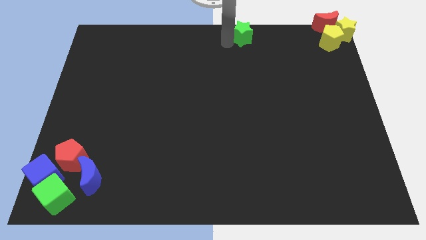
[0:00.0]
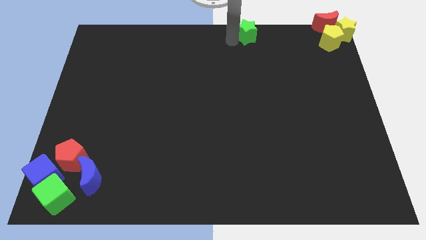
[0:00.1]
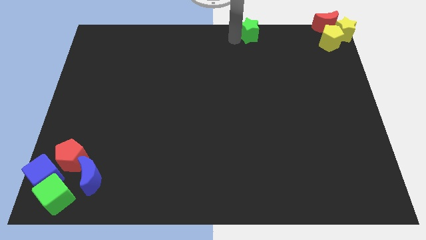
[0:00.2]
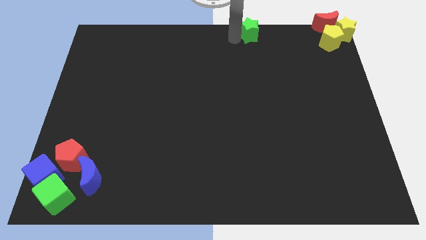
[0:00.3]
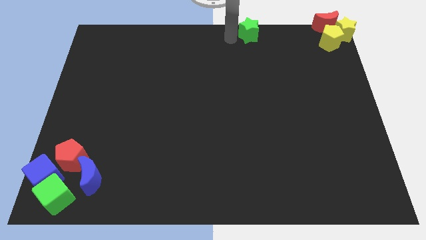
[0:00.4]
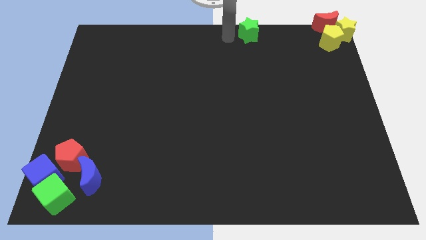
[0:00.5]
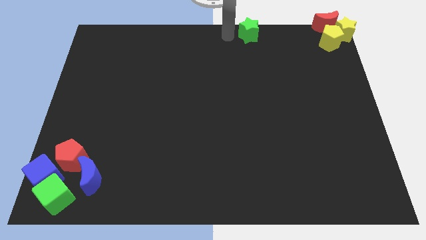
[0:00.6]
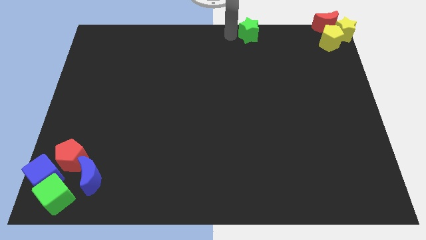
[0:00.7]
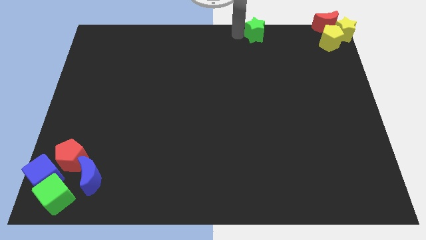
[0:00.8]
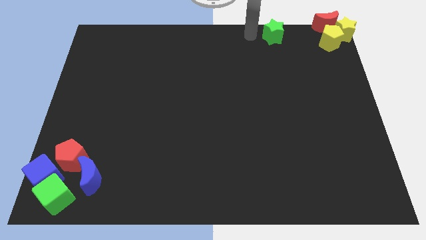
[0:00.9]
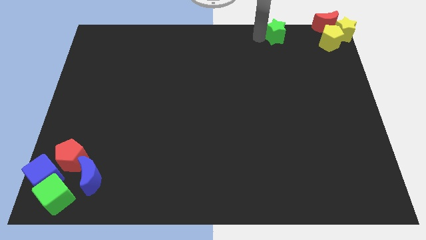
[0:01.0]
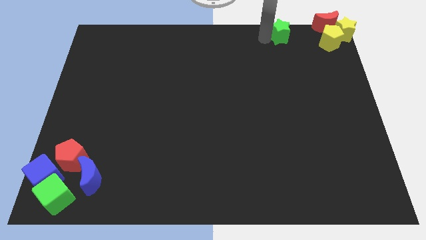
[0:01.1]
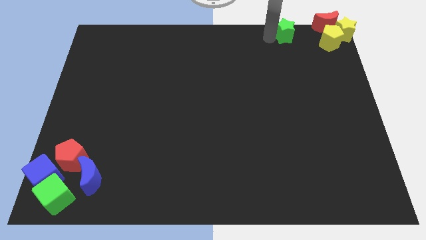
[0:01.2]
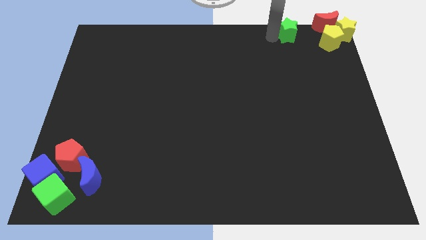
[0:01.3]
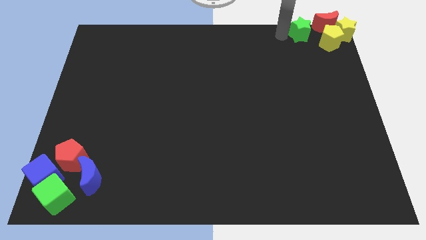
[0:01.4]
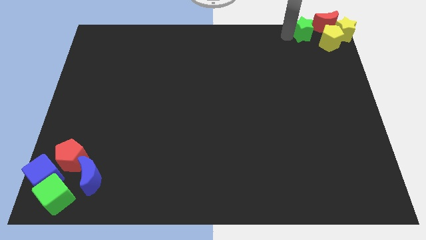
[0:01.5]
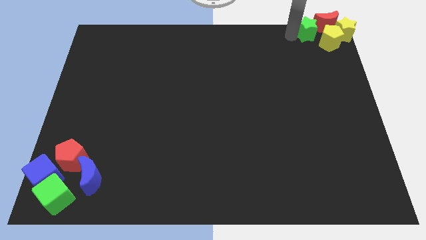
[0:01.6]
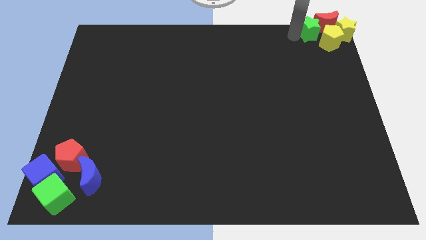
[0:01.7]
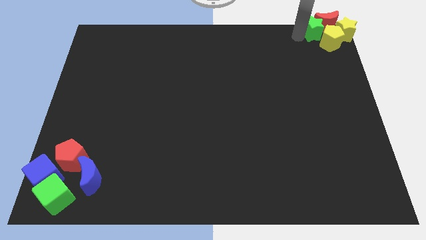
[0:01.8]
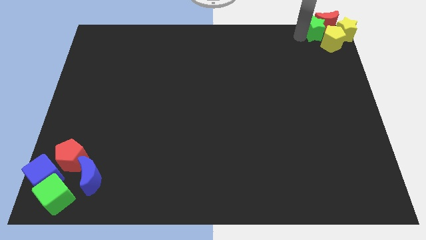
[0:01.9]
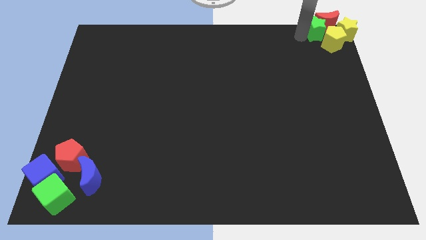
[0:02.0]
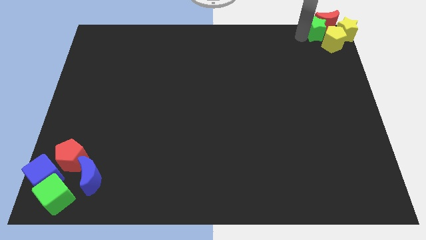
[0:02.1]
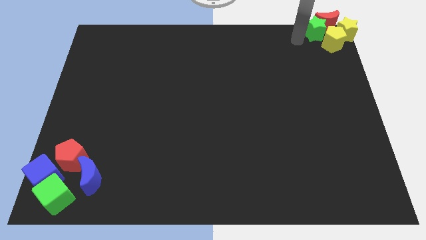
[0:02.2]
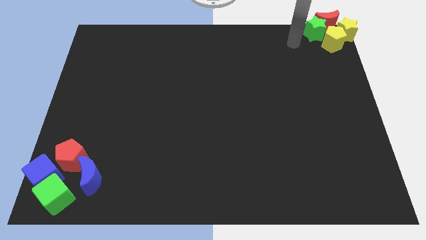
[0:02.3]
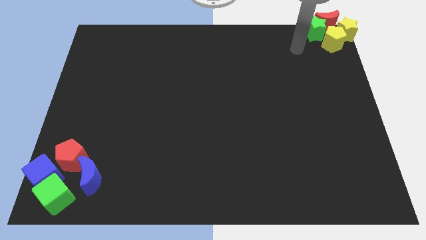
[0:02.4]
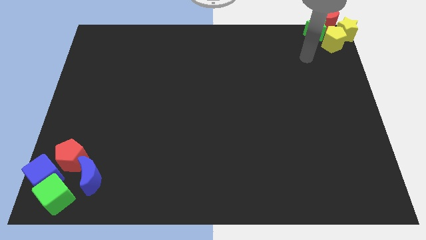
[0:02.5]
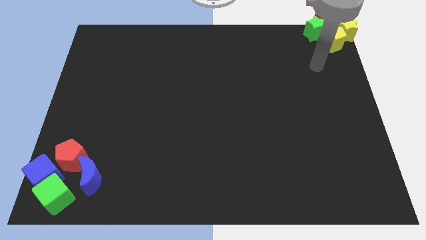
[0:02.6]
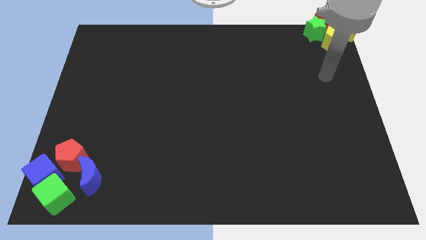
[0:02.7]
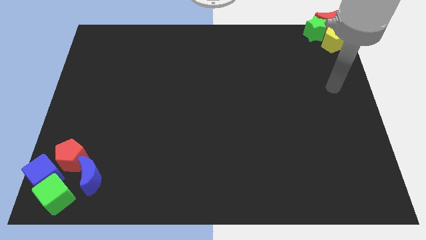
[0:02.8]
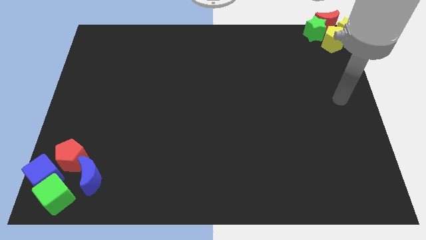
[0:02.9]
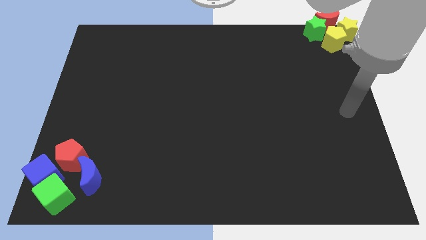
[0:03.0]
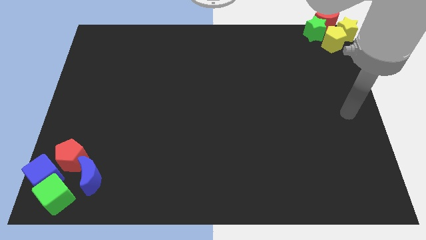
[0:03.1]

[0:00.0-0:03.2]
push the green star right to yellow pentagon

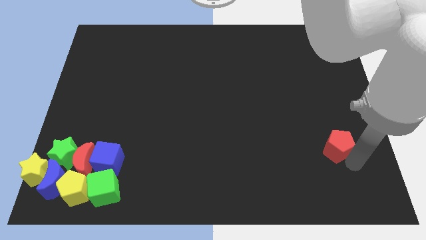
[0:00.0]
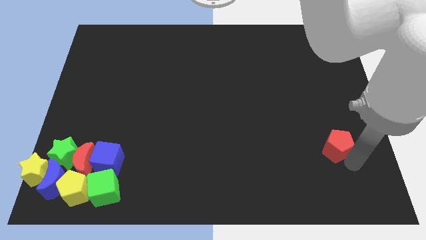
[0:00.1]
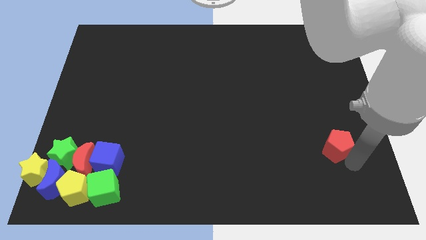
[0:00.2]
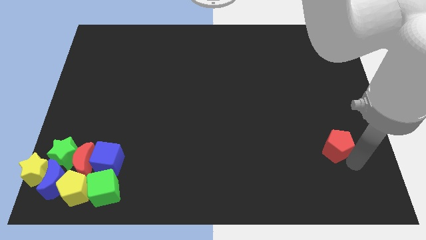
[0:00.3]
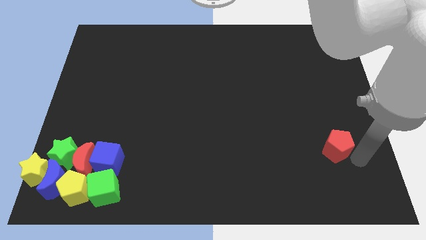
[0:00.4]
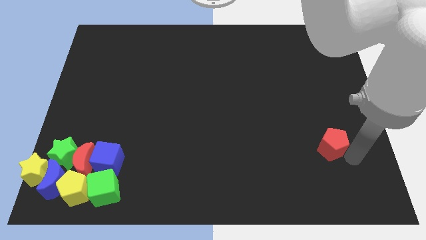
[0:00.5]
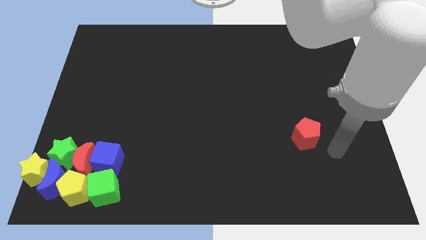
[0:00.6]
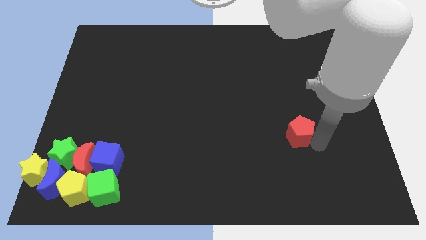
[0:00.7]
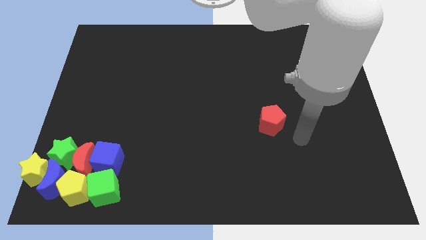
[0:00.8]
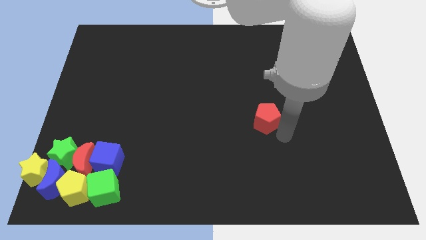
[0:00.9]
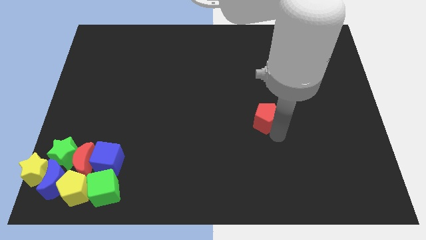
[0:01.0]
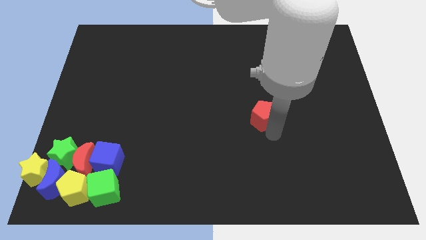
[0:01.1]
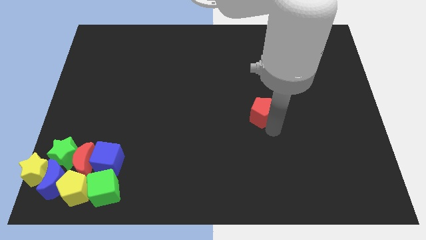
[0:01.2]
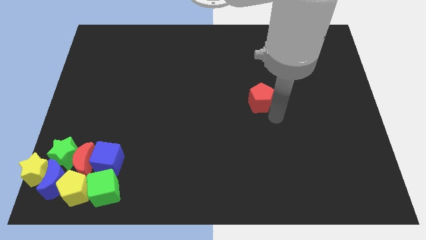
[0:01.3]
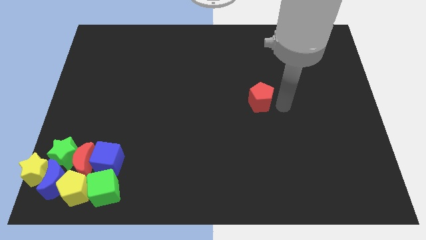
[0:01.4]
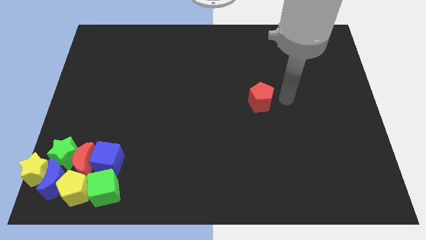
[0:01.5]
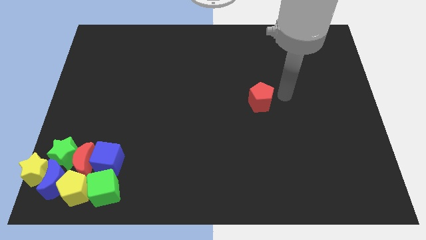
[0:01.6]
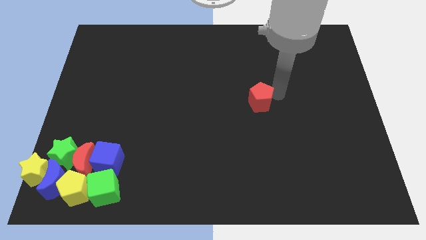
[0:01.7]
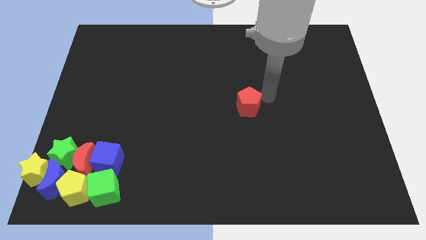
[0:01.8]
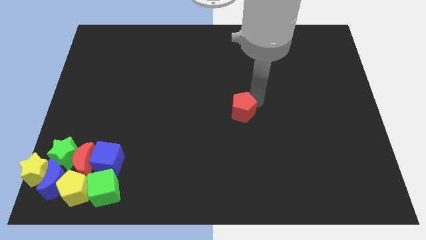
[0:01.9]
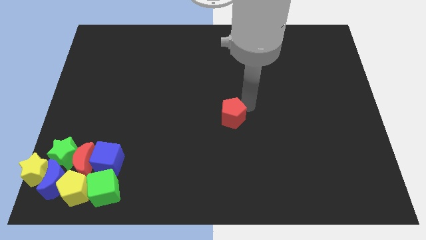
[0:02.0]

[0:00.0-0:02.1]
slide red pentagon towards center

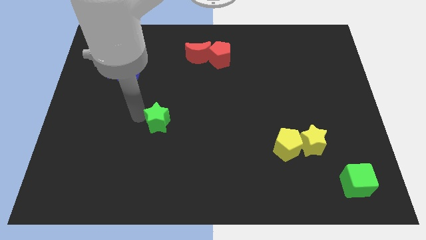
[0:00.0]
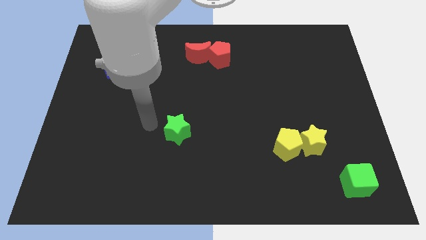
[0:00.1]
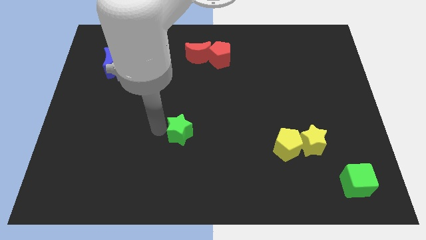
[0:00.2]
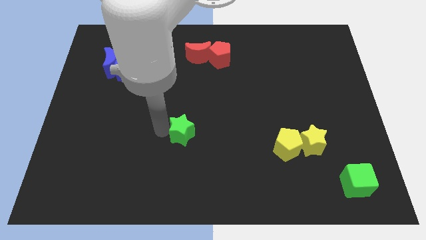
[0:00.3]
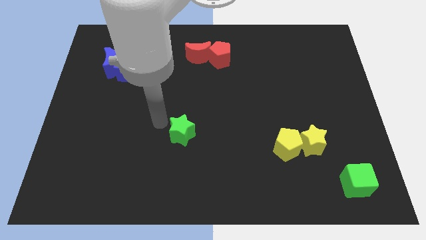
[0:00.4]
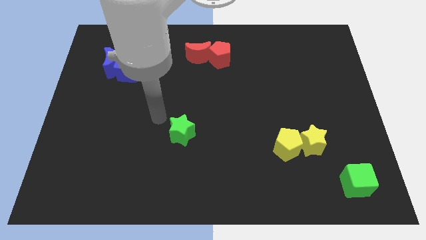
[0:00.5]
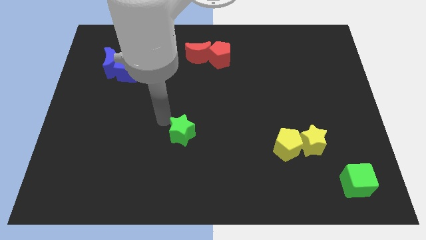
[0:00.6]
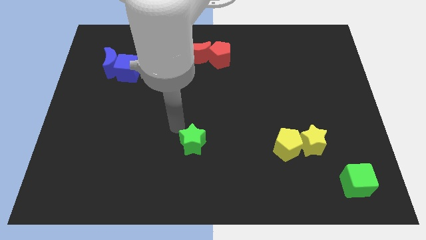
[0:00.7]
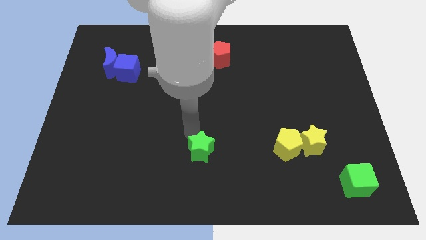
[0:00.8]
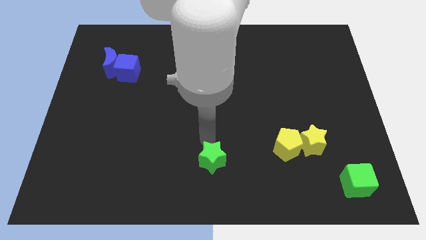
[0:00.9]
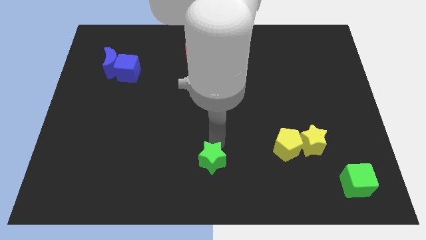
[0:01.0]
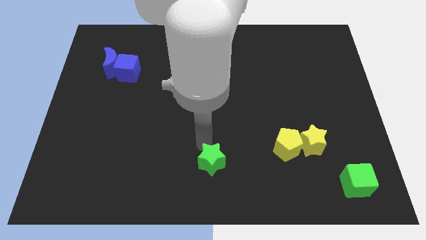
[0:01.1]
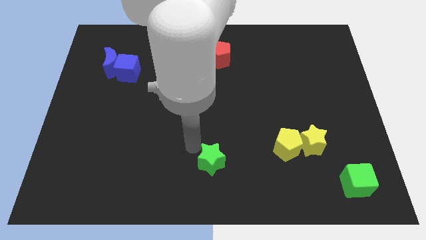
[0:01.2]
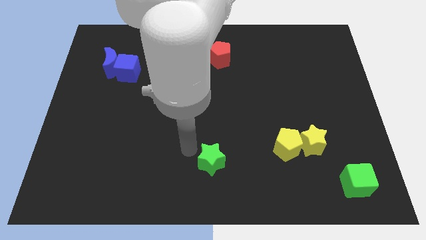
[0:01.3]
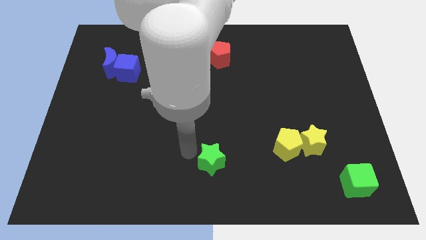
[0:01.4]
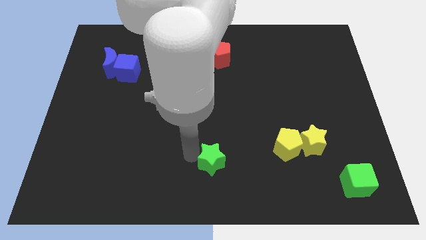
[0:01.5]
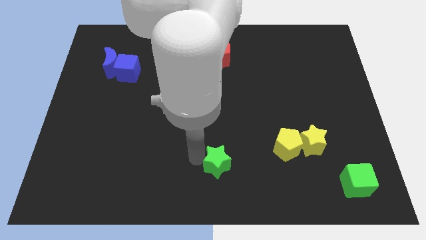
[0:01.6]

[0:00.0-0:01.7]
push the green star to the bottom center of the board

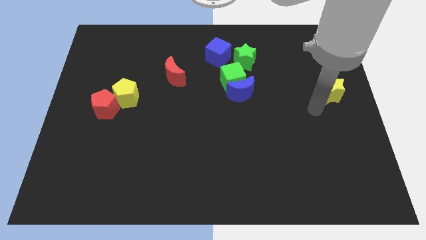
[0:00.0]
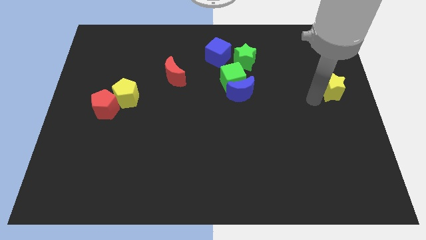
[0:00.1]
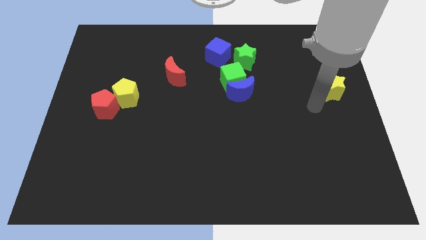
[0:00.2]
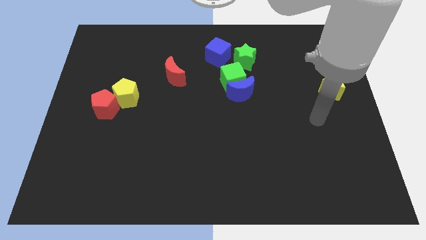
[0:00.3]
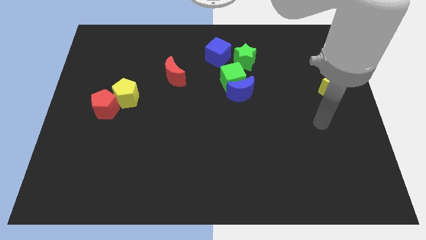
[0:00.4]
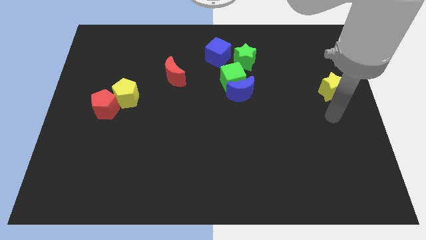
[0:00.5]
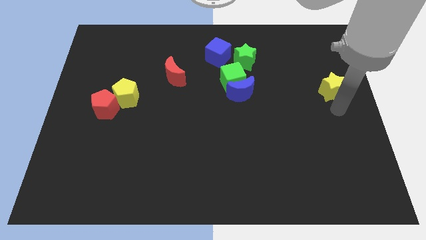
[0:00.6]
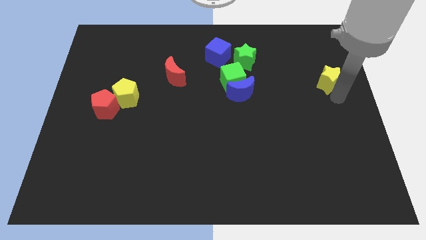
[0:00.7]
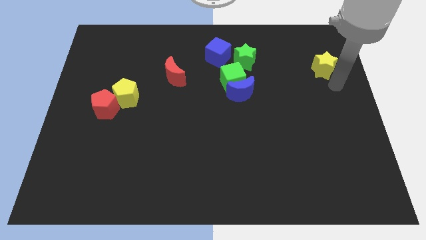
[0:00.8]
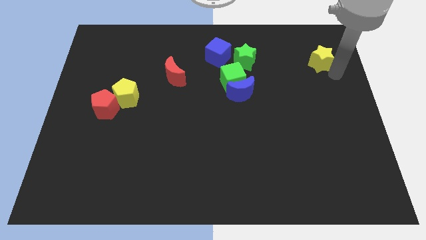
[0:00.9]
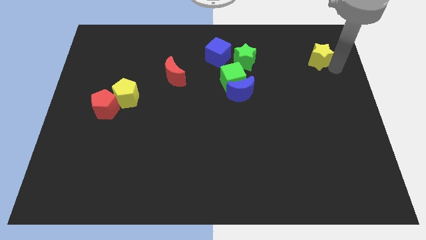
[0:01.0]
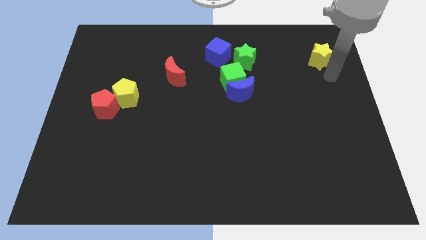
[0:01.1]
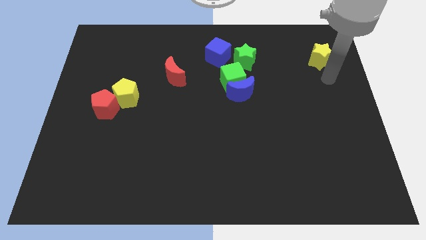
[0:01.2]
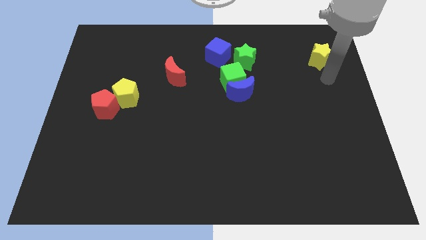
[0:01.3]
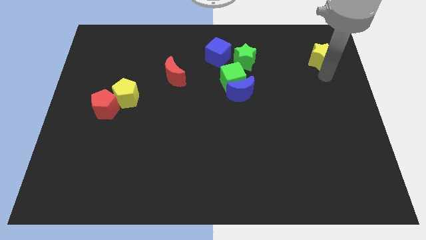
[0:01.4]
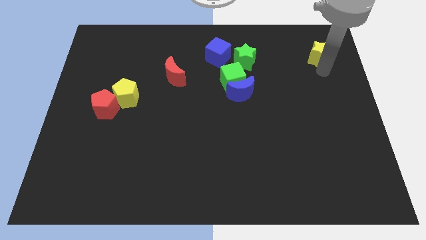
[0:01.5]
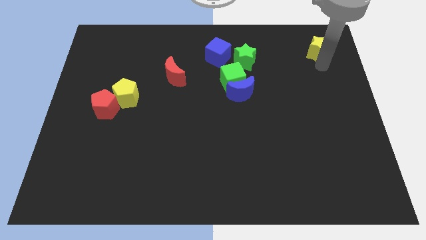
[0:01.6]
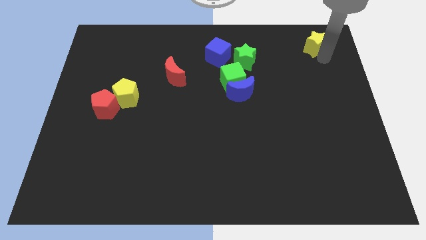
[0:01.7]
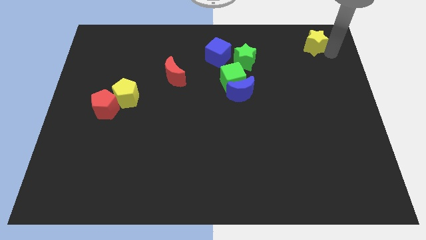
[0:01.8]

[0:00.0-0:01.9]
place the yellow star to the top right corner of the board

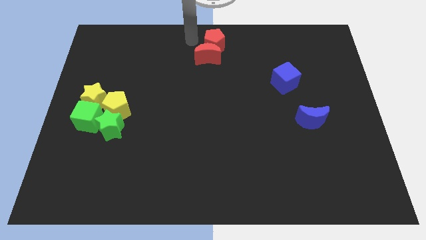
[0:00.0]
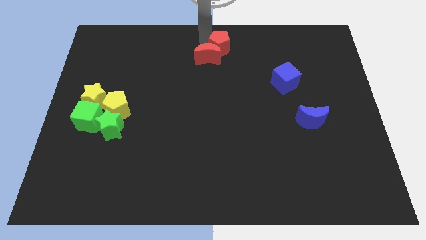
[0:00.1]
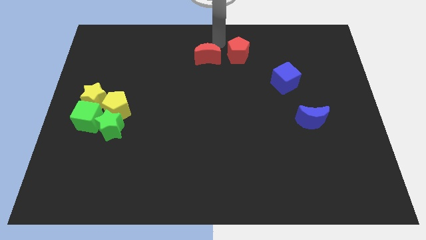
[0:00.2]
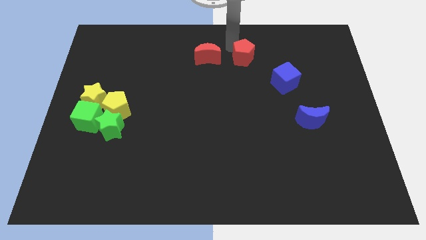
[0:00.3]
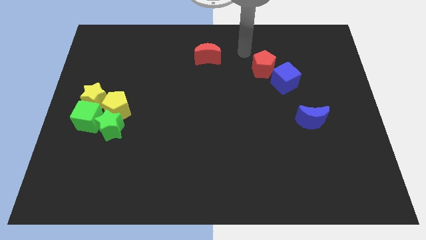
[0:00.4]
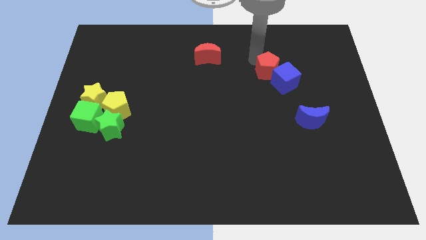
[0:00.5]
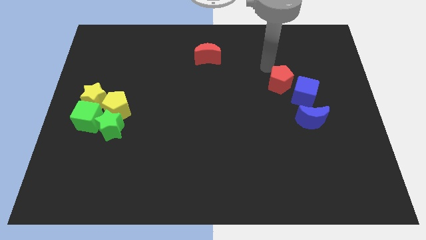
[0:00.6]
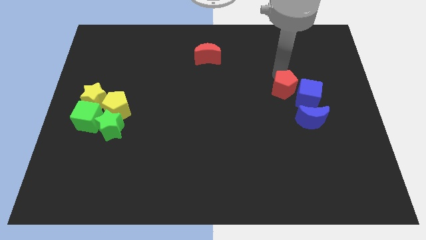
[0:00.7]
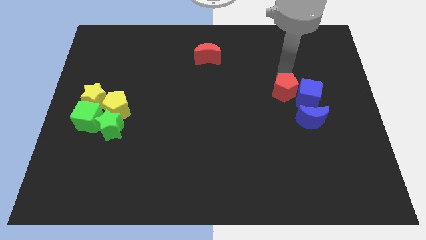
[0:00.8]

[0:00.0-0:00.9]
push the red pentagon left to the blue cube
